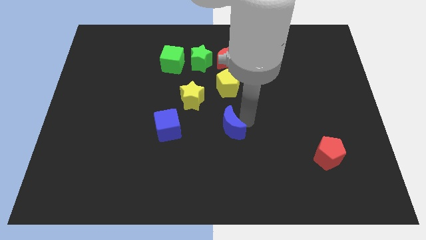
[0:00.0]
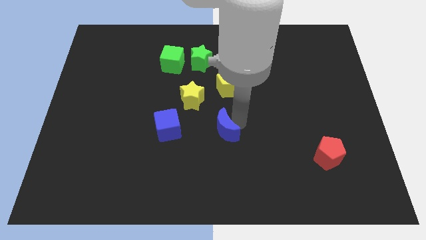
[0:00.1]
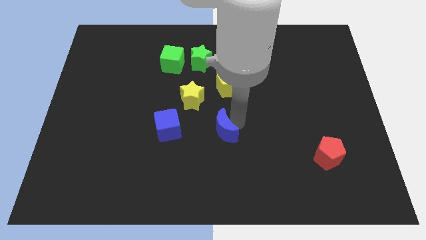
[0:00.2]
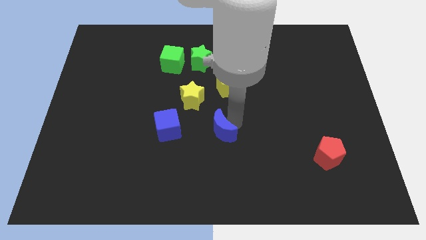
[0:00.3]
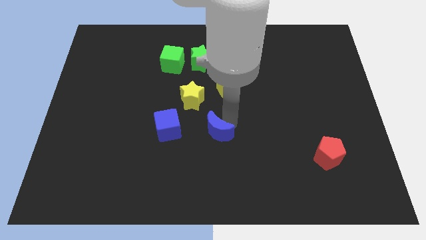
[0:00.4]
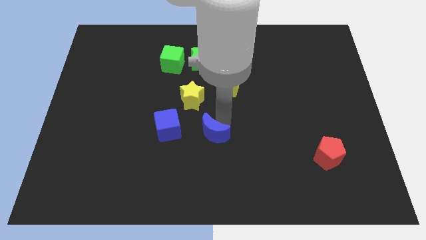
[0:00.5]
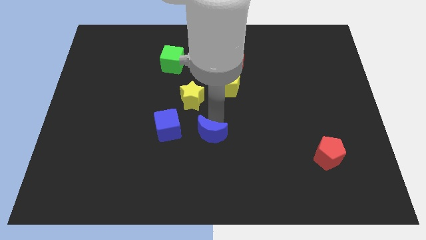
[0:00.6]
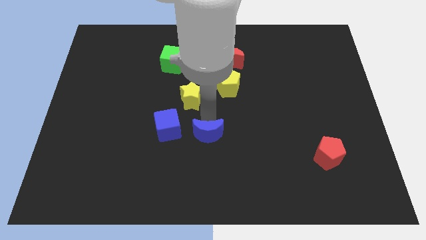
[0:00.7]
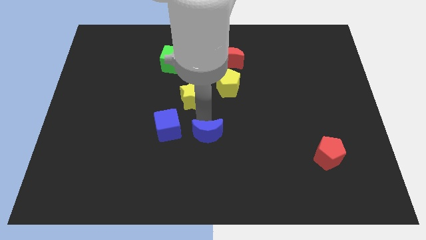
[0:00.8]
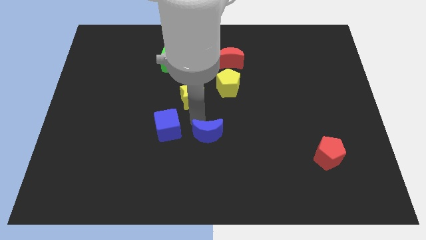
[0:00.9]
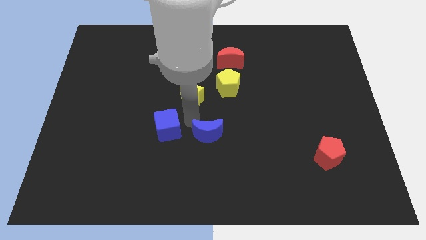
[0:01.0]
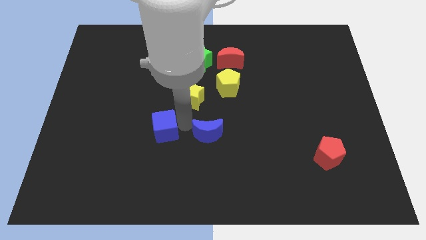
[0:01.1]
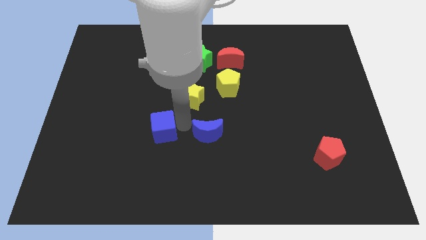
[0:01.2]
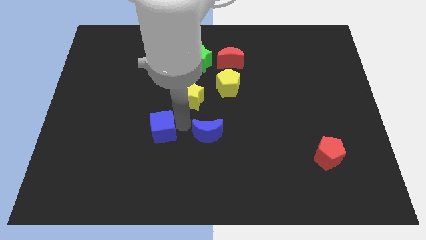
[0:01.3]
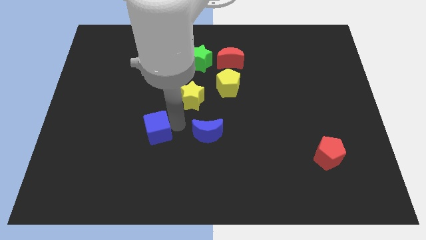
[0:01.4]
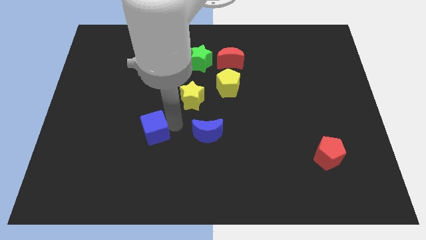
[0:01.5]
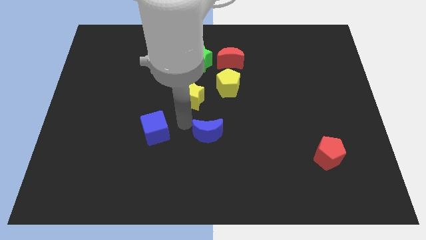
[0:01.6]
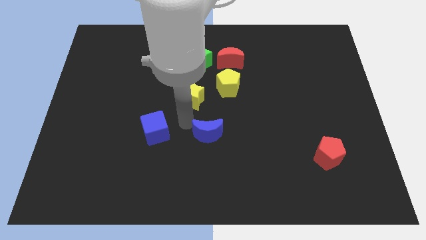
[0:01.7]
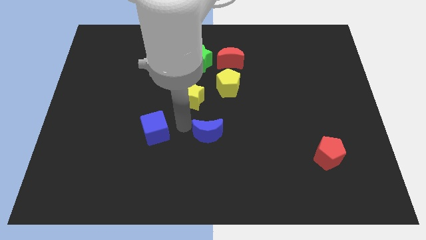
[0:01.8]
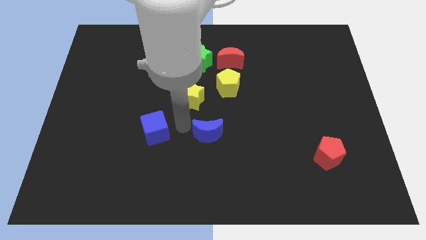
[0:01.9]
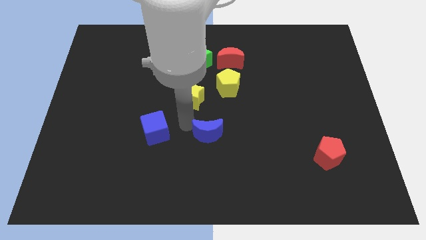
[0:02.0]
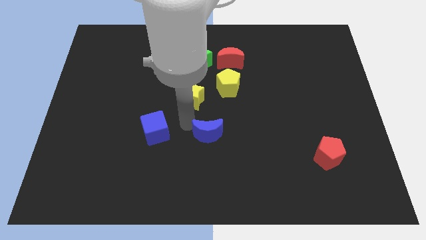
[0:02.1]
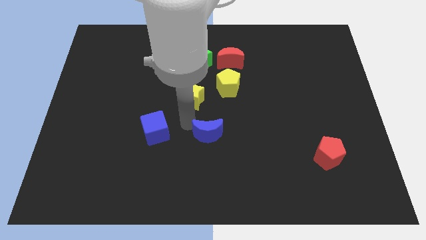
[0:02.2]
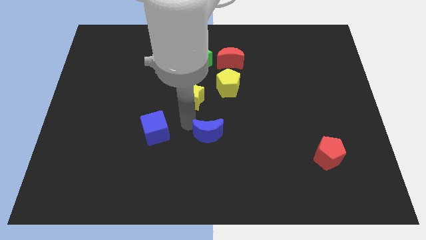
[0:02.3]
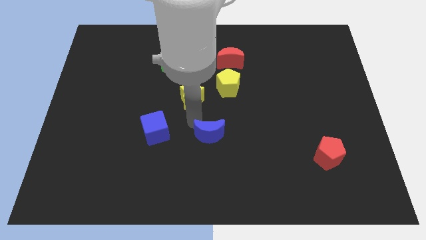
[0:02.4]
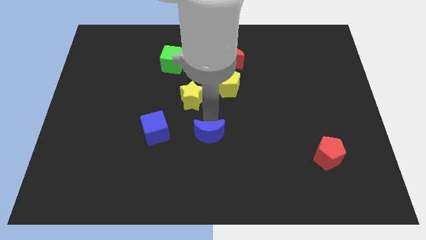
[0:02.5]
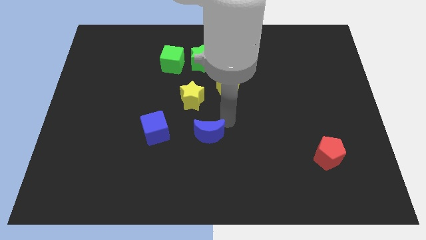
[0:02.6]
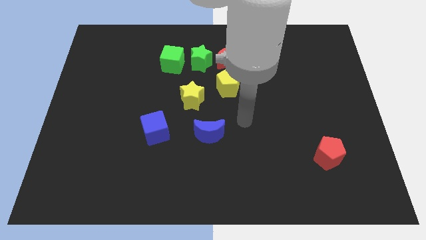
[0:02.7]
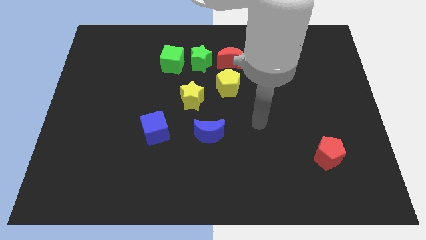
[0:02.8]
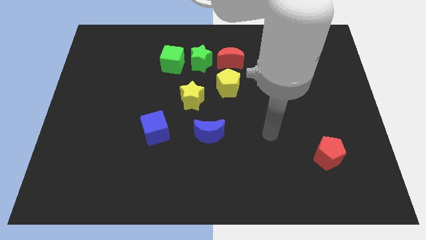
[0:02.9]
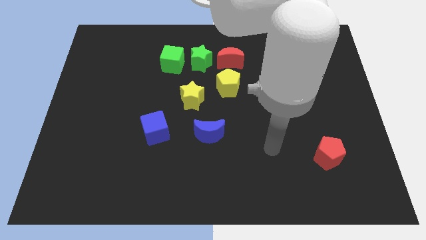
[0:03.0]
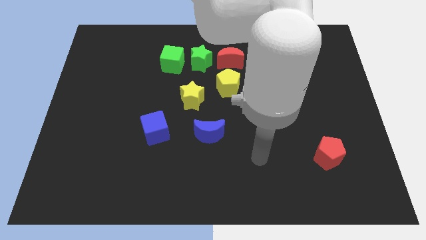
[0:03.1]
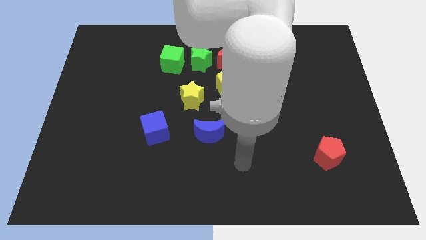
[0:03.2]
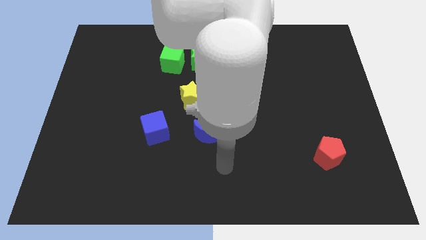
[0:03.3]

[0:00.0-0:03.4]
push blue moon towards blue cube

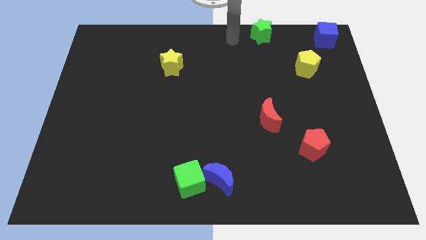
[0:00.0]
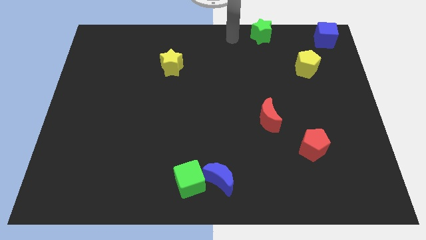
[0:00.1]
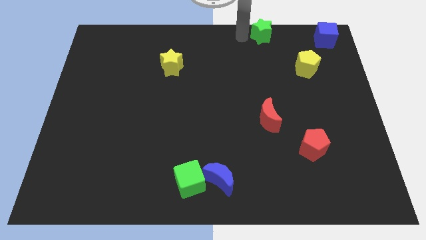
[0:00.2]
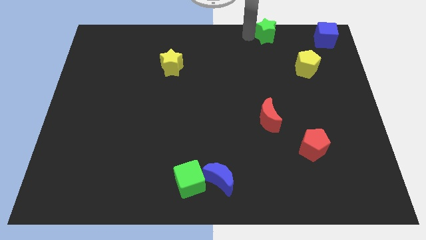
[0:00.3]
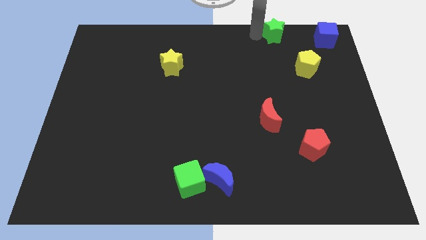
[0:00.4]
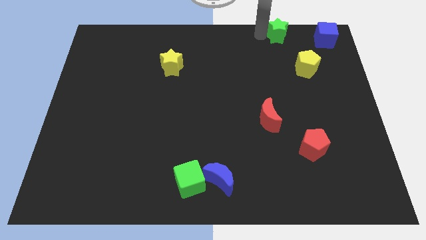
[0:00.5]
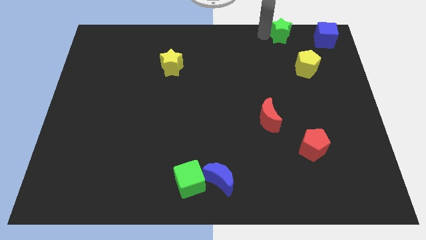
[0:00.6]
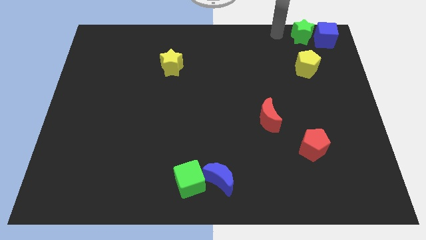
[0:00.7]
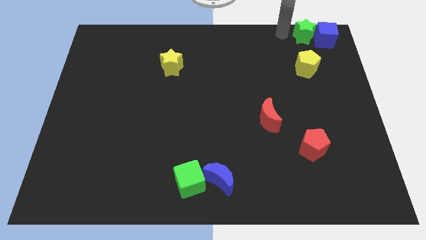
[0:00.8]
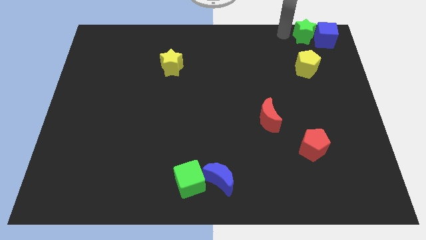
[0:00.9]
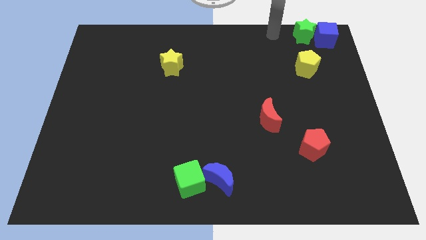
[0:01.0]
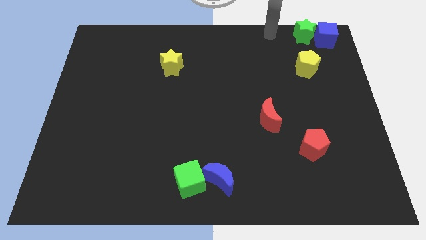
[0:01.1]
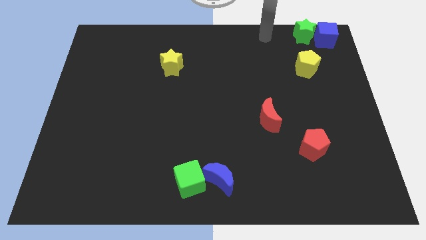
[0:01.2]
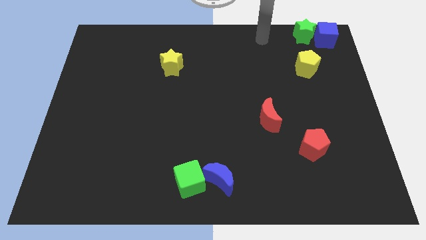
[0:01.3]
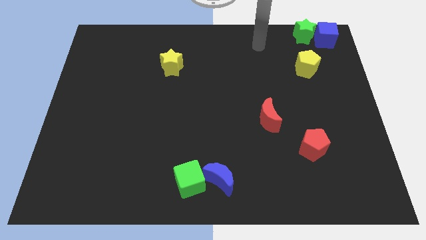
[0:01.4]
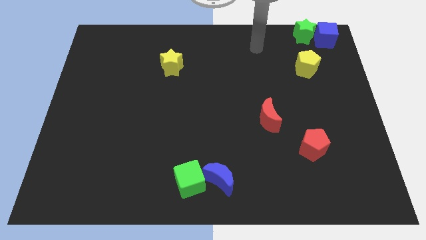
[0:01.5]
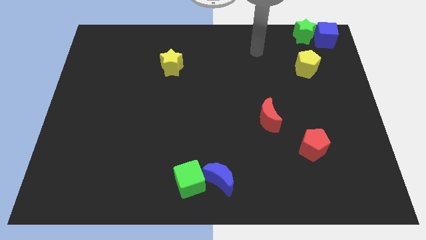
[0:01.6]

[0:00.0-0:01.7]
push the green star into the blue cube

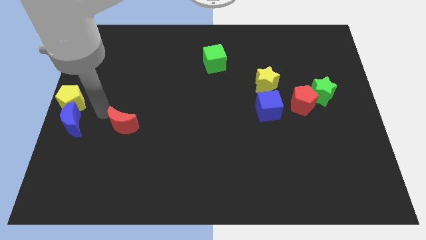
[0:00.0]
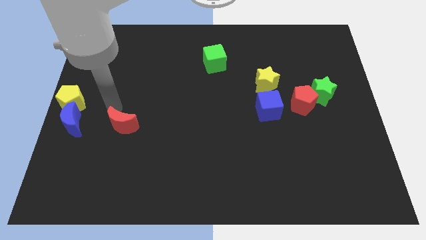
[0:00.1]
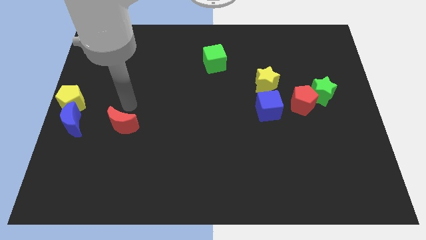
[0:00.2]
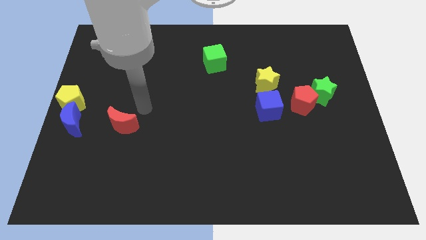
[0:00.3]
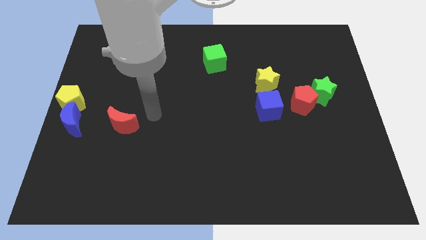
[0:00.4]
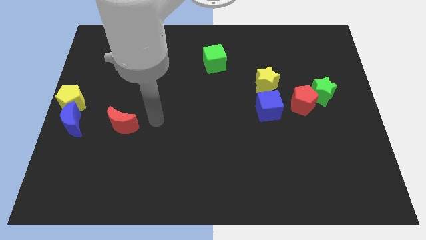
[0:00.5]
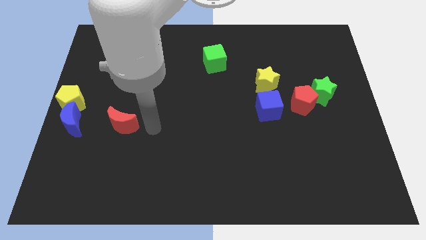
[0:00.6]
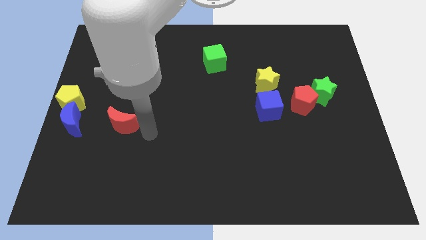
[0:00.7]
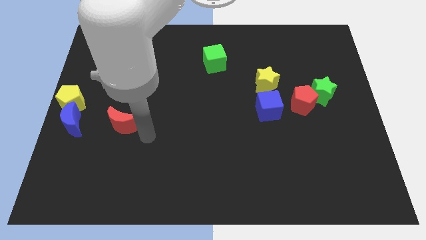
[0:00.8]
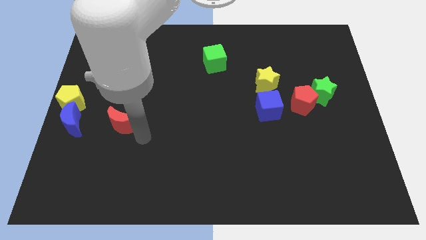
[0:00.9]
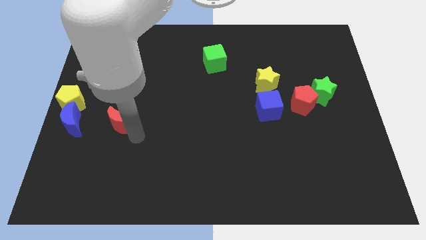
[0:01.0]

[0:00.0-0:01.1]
move your arm to the bottom of the red pentagon

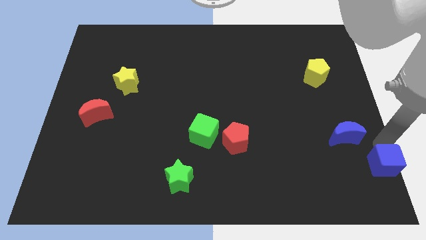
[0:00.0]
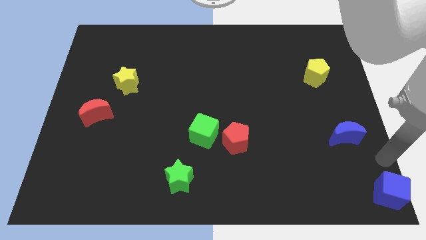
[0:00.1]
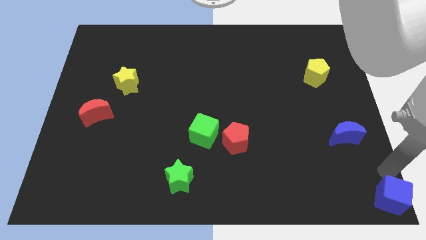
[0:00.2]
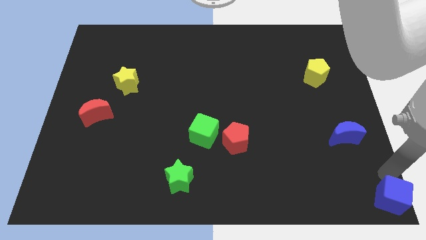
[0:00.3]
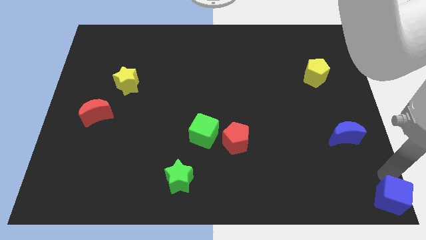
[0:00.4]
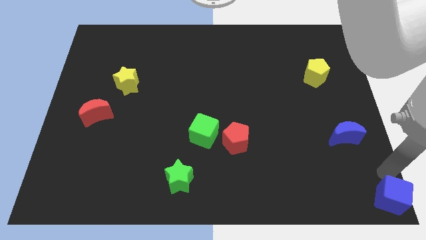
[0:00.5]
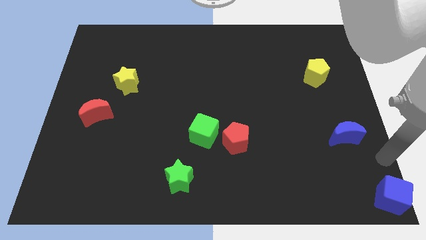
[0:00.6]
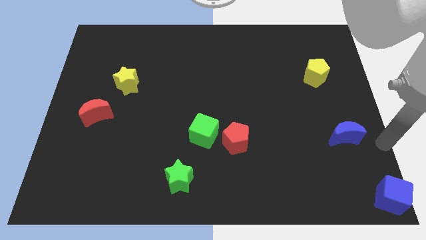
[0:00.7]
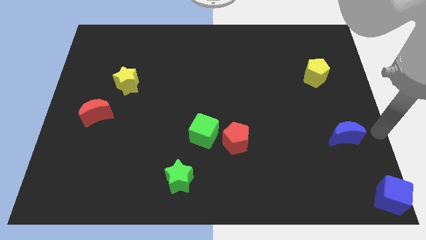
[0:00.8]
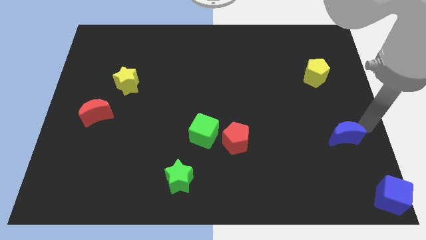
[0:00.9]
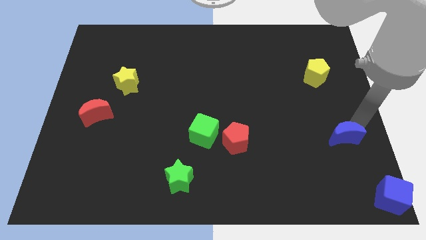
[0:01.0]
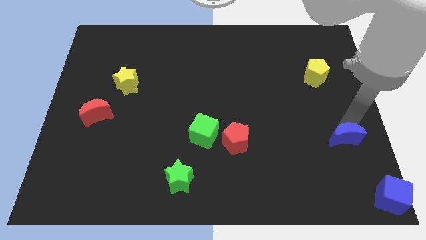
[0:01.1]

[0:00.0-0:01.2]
push blue cube to the bottom right corner of the board

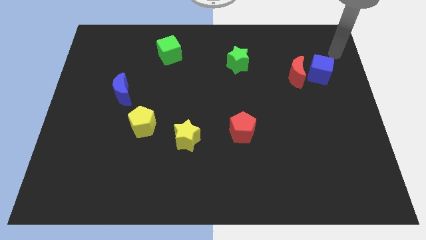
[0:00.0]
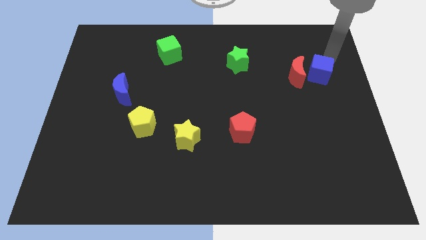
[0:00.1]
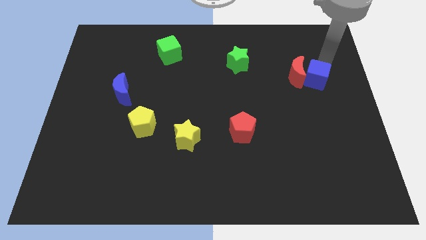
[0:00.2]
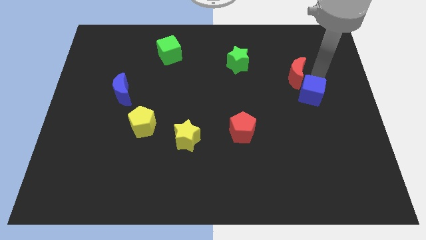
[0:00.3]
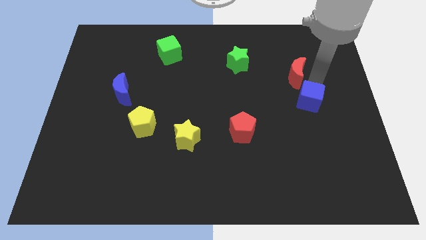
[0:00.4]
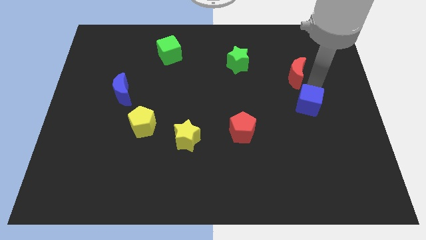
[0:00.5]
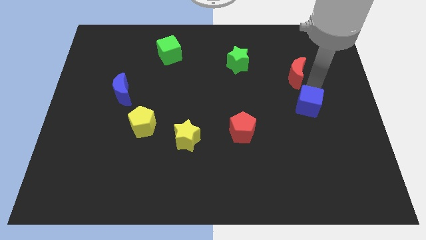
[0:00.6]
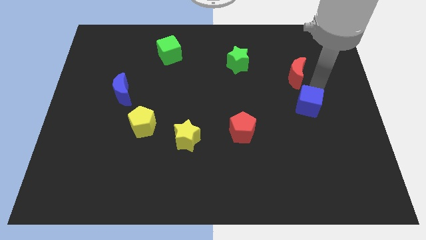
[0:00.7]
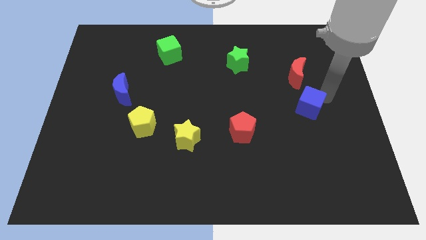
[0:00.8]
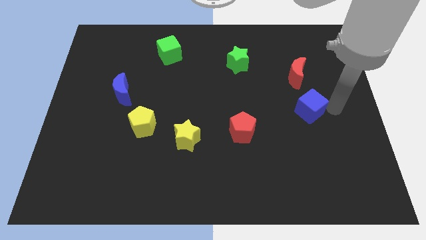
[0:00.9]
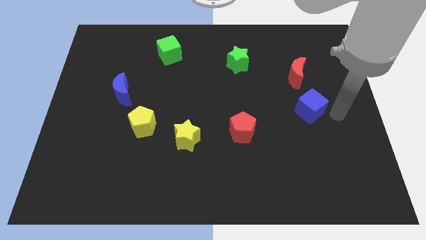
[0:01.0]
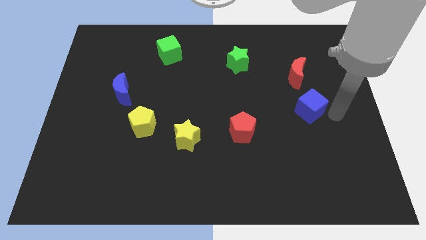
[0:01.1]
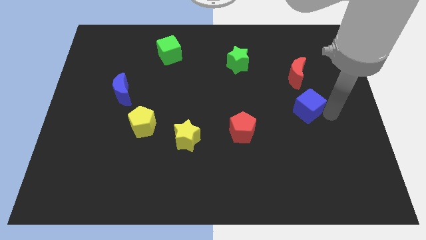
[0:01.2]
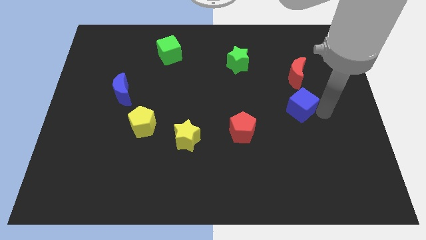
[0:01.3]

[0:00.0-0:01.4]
push the blue cube away from the red crescent
